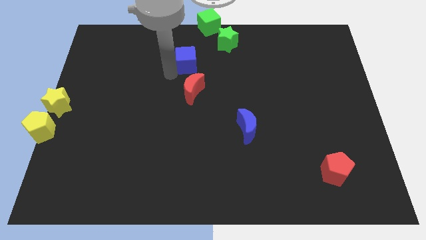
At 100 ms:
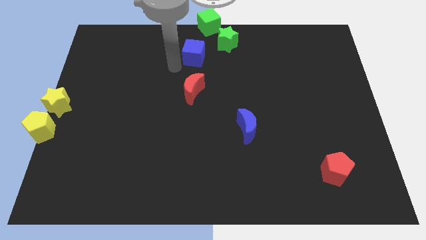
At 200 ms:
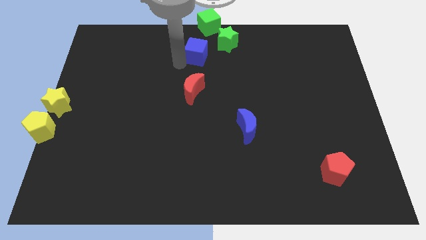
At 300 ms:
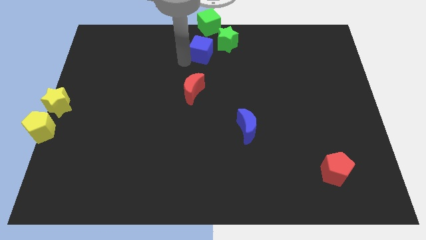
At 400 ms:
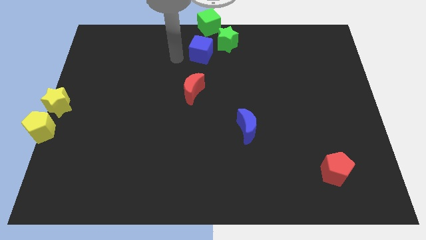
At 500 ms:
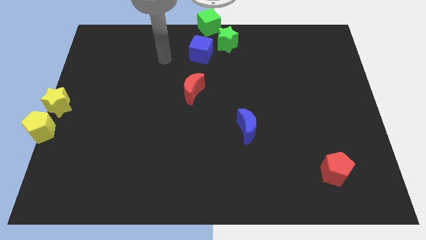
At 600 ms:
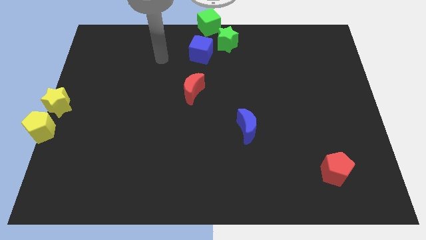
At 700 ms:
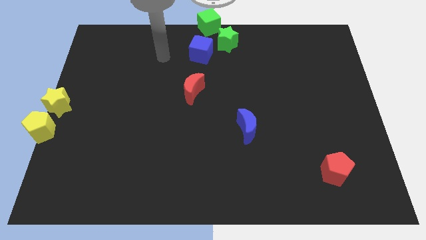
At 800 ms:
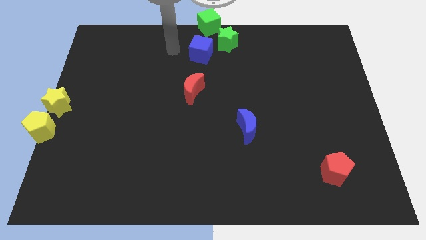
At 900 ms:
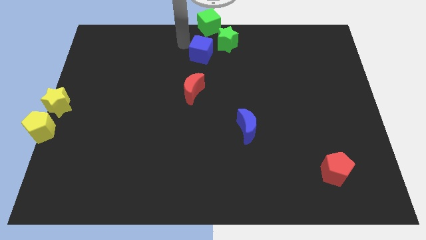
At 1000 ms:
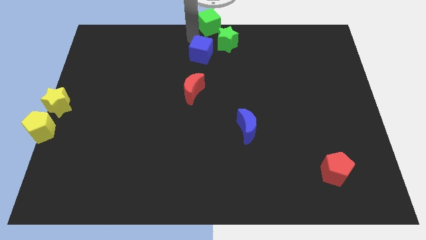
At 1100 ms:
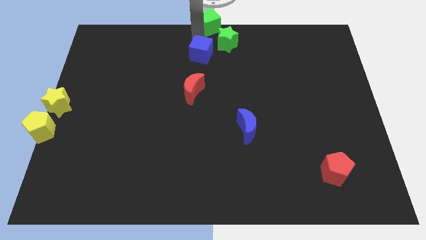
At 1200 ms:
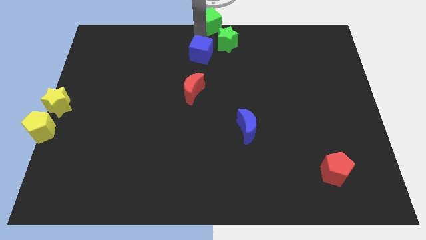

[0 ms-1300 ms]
move blue cube close to the green star

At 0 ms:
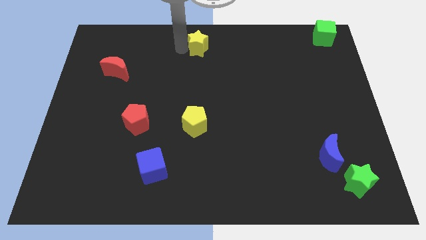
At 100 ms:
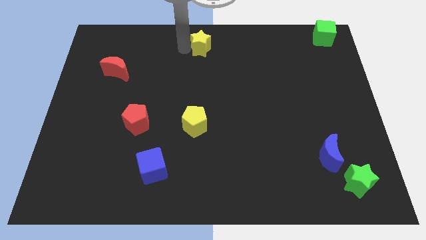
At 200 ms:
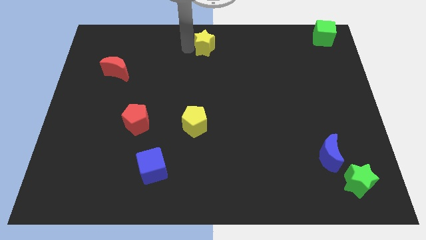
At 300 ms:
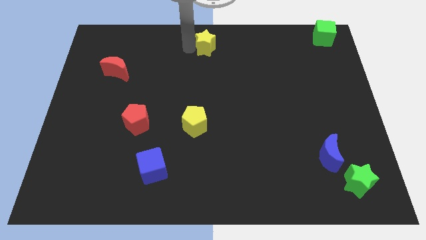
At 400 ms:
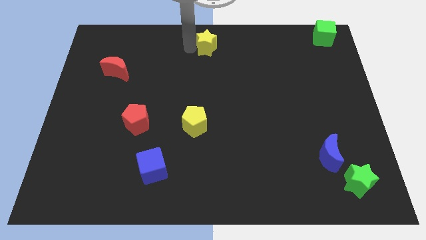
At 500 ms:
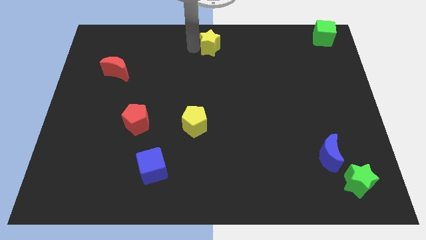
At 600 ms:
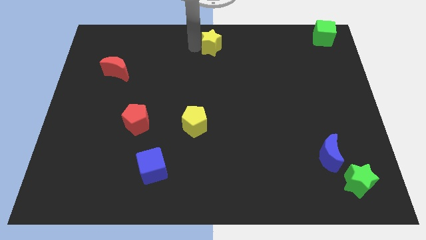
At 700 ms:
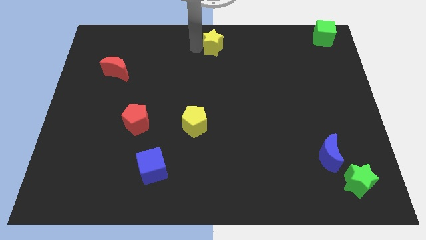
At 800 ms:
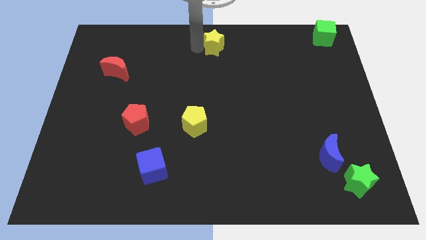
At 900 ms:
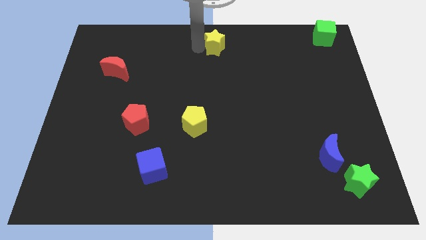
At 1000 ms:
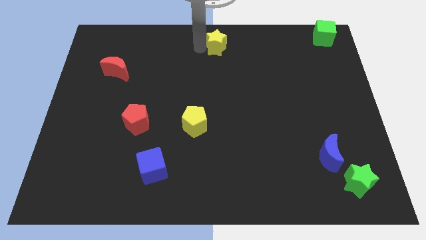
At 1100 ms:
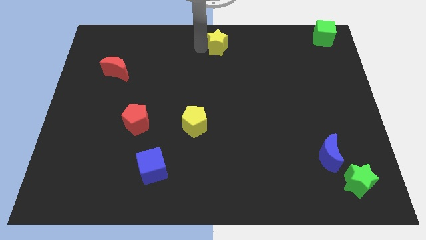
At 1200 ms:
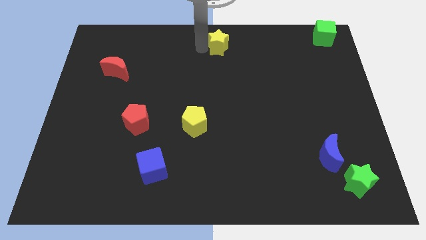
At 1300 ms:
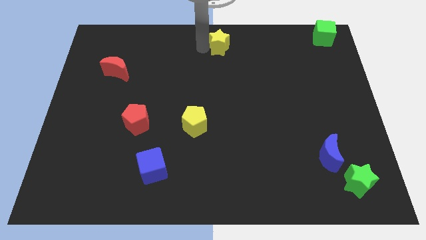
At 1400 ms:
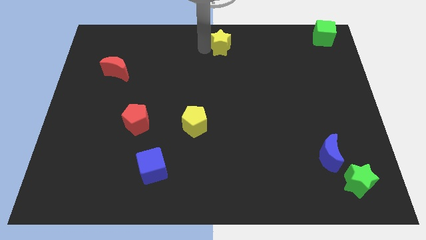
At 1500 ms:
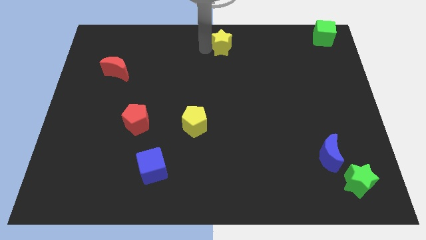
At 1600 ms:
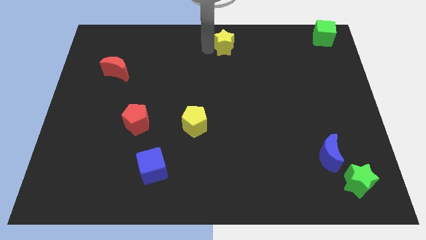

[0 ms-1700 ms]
push the yellow star to the right of the board

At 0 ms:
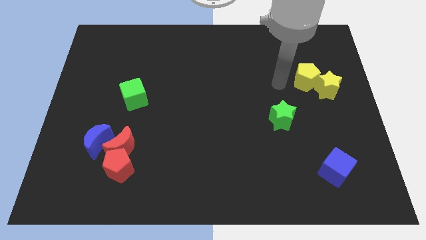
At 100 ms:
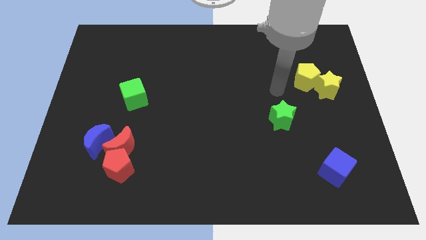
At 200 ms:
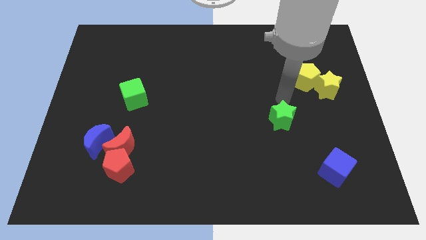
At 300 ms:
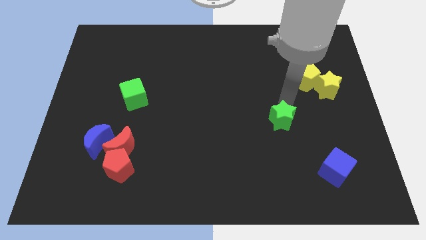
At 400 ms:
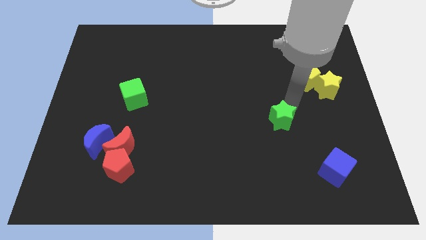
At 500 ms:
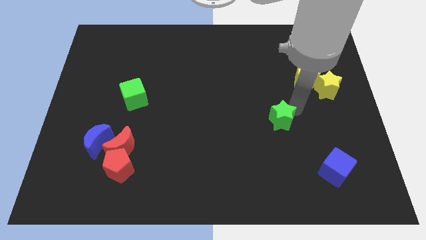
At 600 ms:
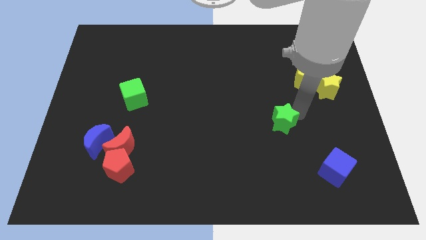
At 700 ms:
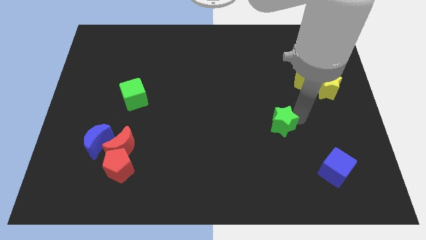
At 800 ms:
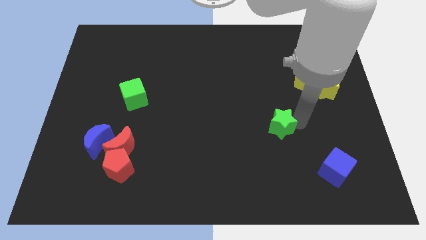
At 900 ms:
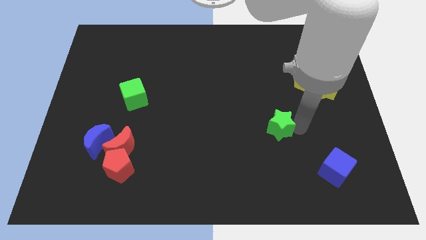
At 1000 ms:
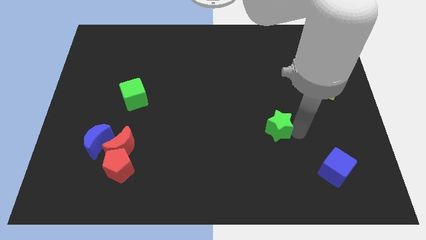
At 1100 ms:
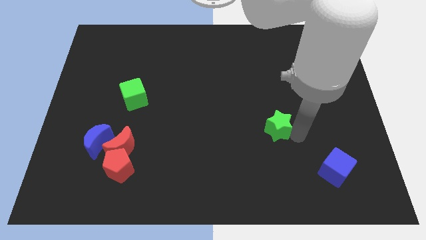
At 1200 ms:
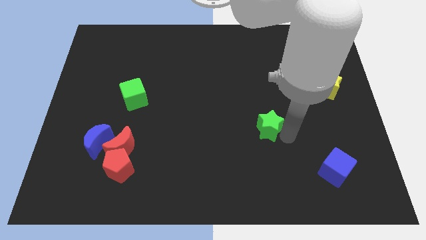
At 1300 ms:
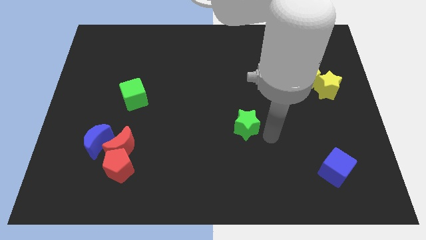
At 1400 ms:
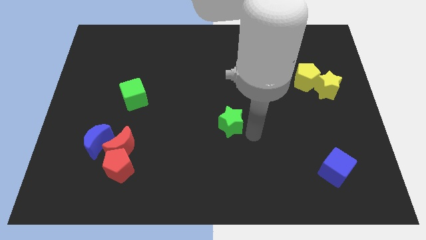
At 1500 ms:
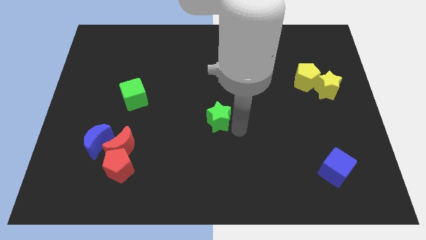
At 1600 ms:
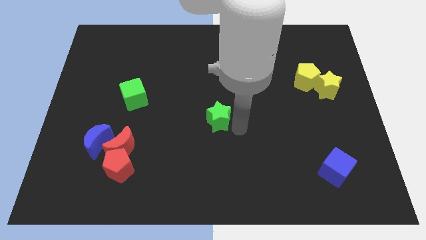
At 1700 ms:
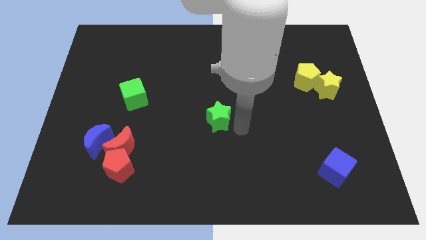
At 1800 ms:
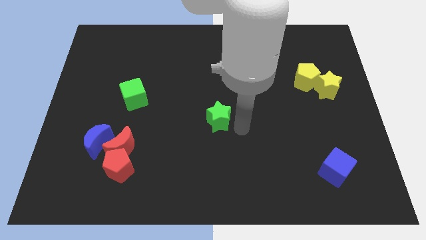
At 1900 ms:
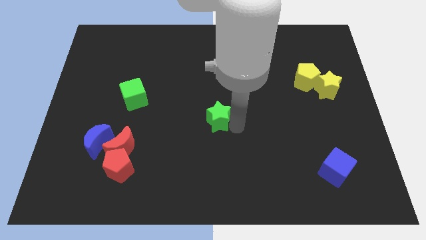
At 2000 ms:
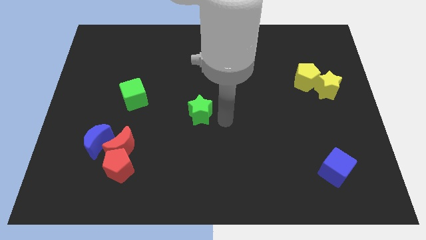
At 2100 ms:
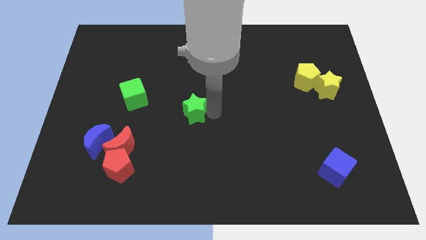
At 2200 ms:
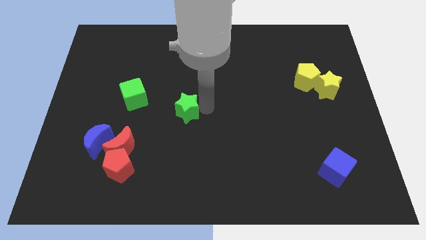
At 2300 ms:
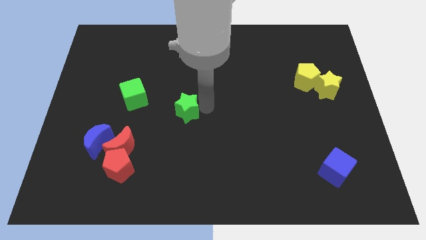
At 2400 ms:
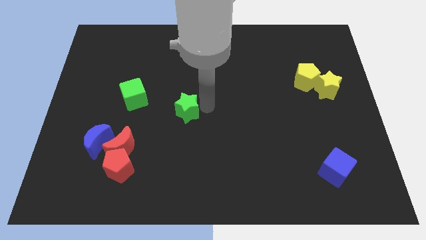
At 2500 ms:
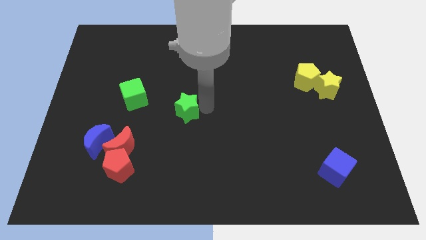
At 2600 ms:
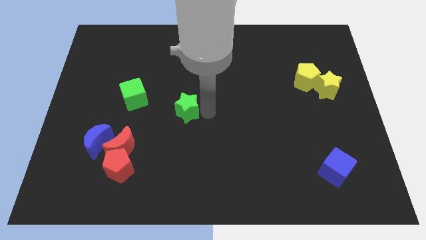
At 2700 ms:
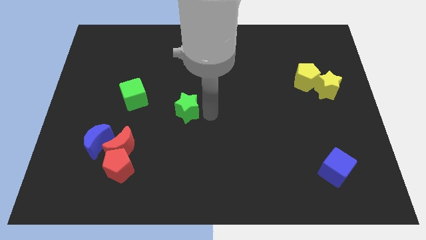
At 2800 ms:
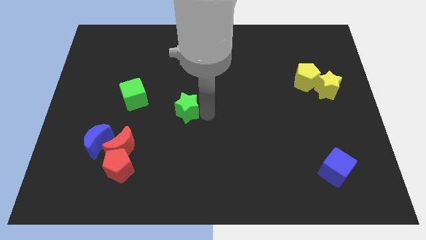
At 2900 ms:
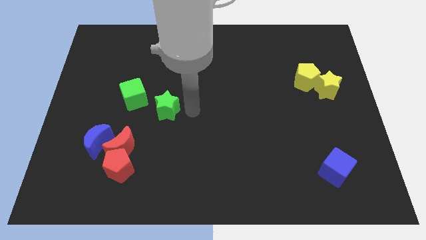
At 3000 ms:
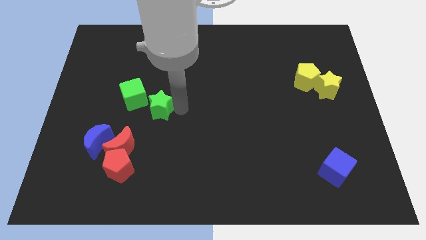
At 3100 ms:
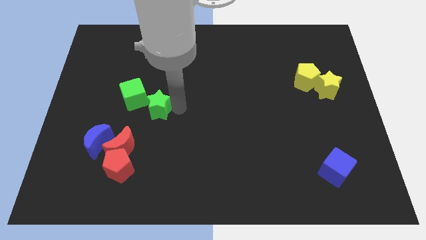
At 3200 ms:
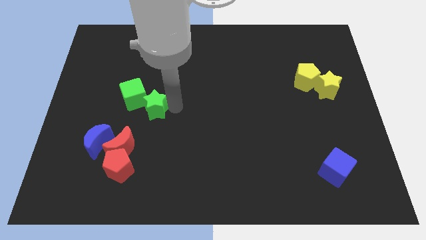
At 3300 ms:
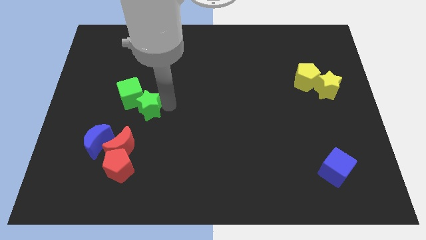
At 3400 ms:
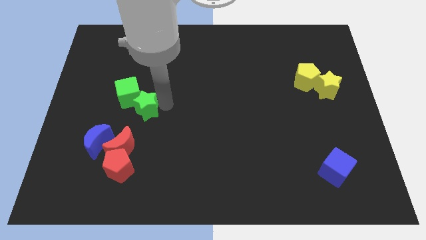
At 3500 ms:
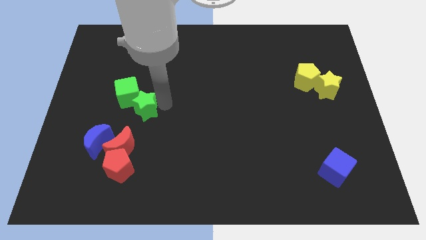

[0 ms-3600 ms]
place the green star and green cube together above the red crescent

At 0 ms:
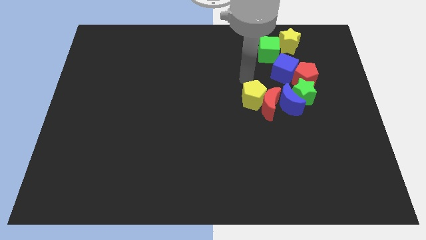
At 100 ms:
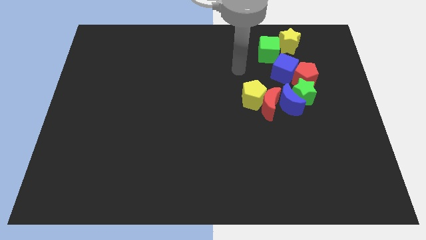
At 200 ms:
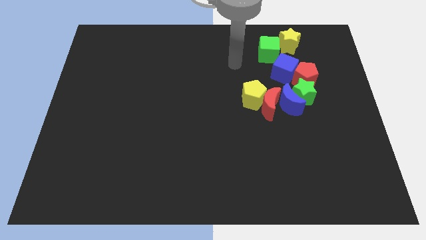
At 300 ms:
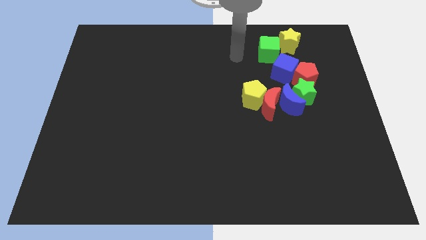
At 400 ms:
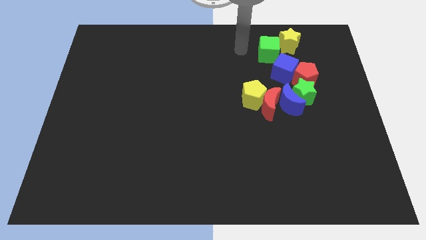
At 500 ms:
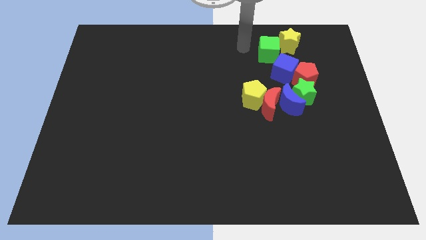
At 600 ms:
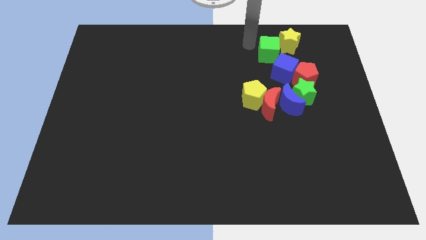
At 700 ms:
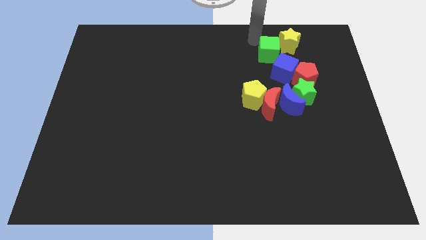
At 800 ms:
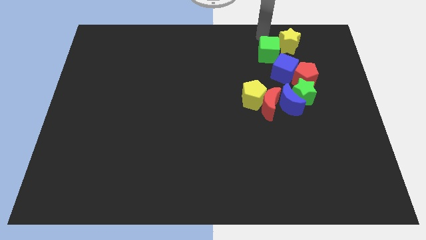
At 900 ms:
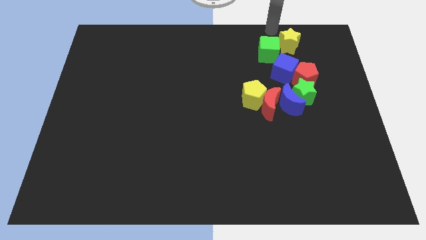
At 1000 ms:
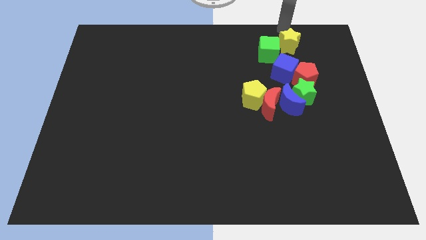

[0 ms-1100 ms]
place the arm above the yellow star

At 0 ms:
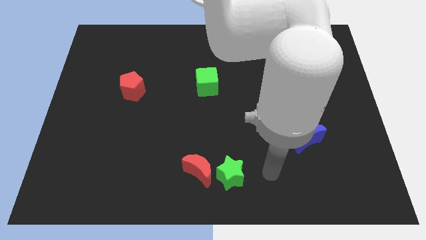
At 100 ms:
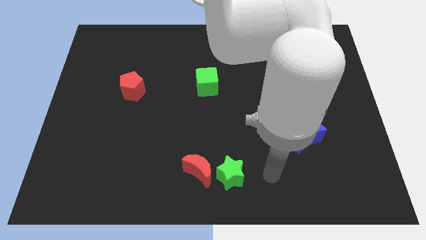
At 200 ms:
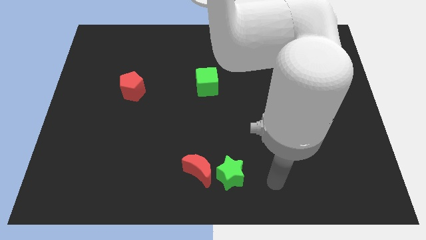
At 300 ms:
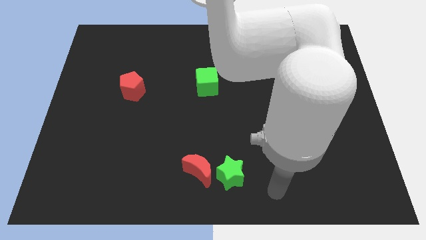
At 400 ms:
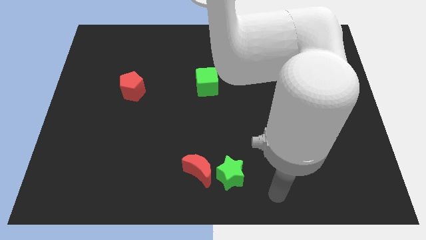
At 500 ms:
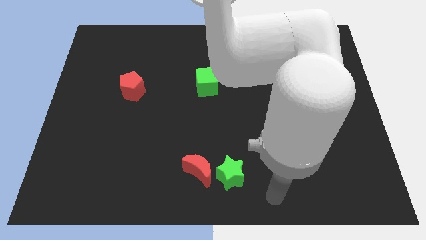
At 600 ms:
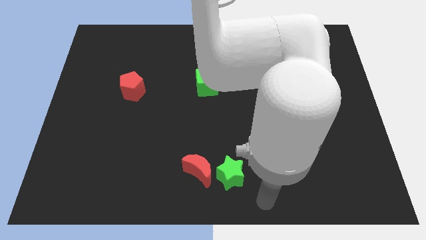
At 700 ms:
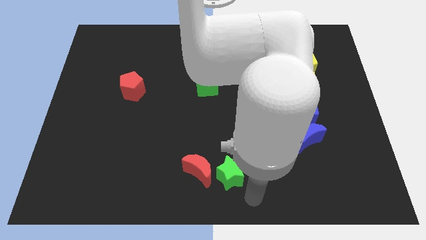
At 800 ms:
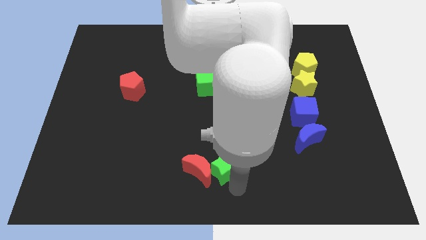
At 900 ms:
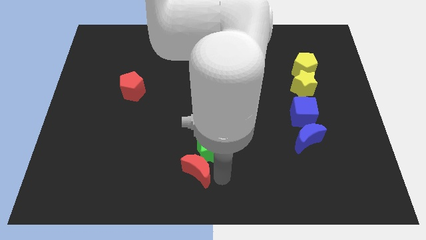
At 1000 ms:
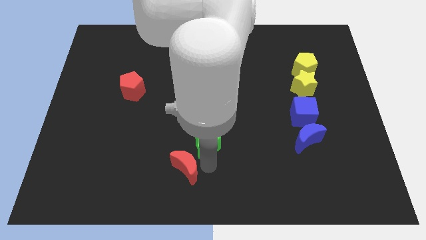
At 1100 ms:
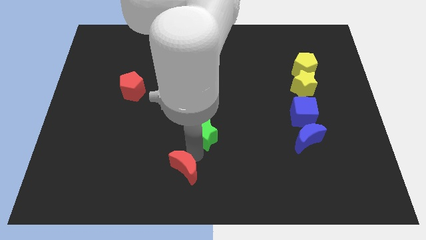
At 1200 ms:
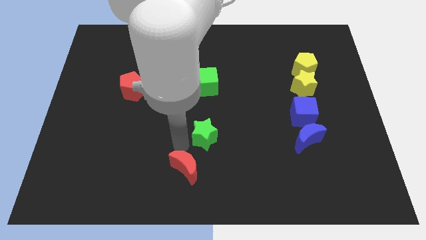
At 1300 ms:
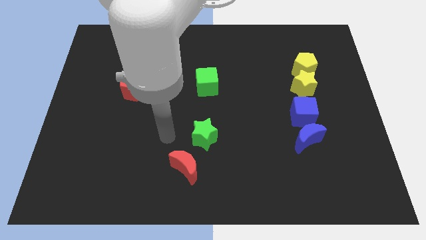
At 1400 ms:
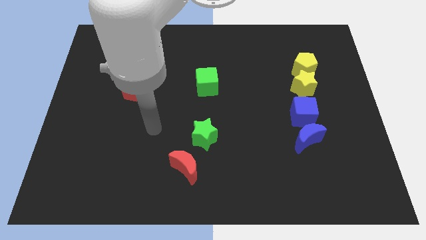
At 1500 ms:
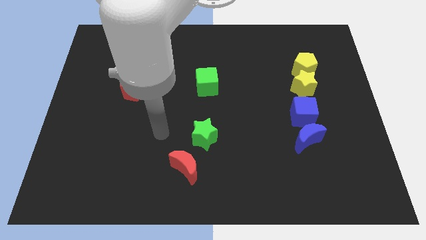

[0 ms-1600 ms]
move the green star towards the center of the board
